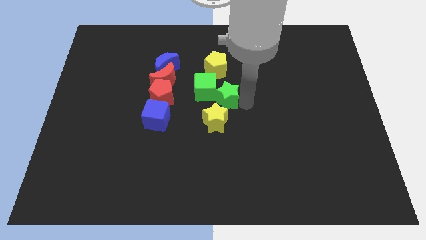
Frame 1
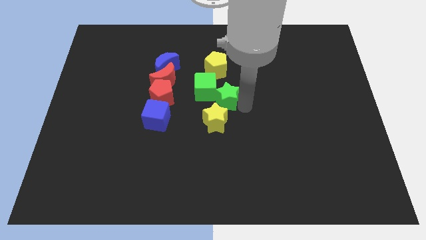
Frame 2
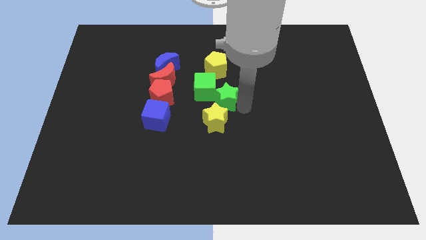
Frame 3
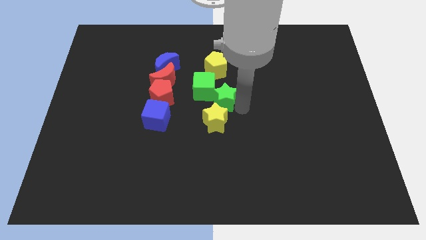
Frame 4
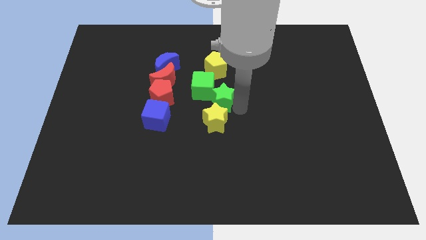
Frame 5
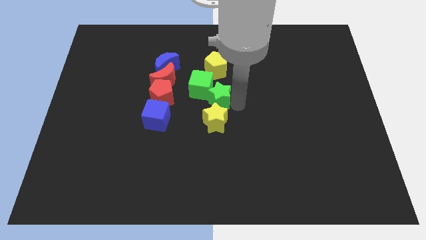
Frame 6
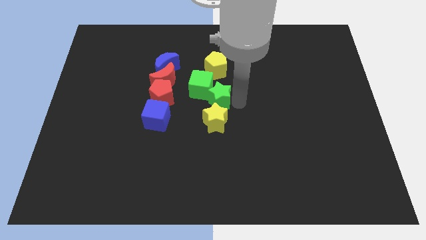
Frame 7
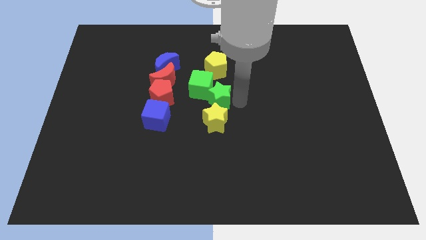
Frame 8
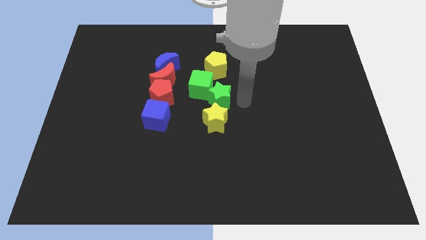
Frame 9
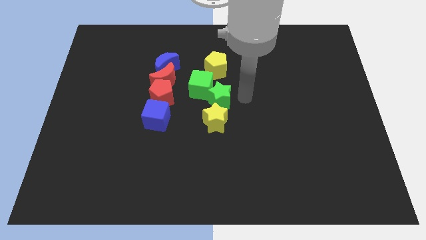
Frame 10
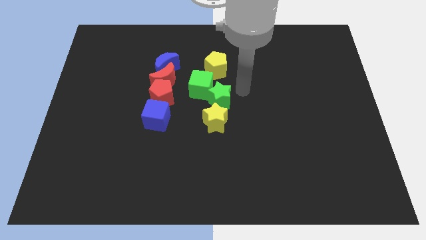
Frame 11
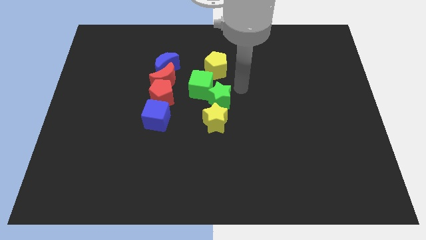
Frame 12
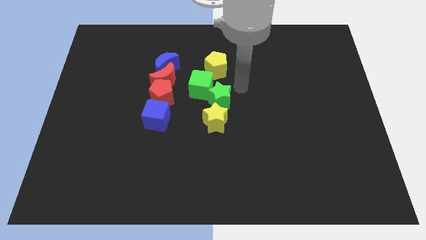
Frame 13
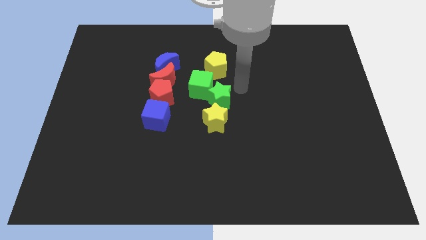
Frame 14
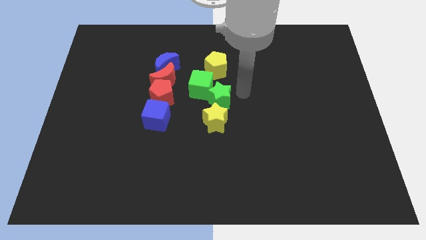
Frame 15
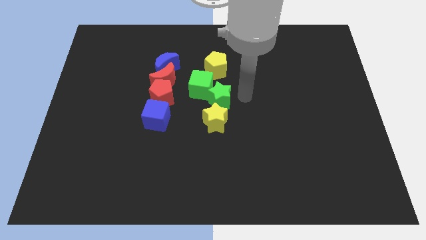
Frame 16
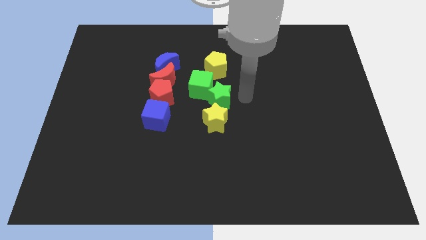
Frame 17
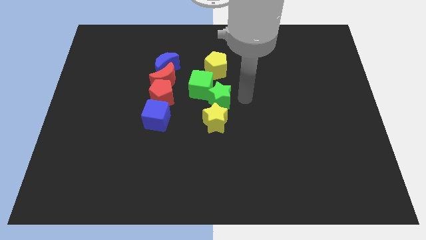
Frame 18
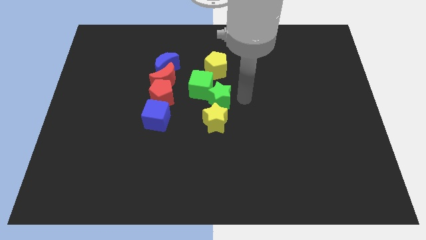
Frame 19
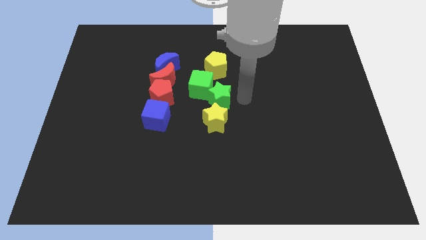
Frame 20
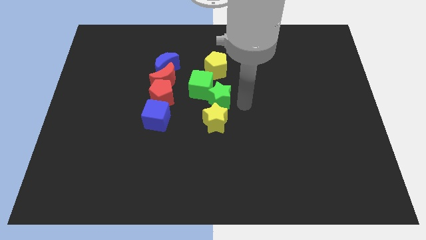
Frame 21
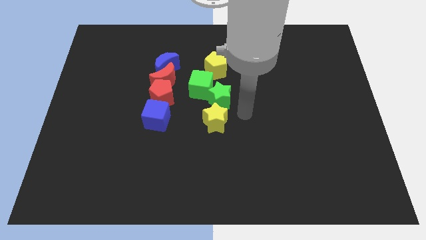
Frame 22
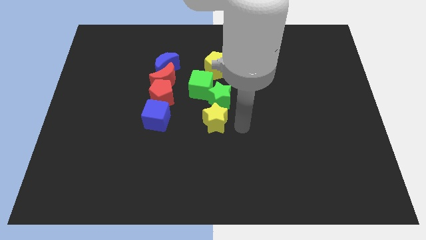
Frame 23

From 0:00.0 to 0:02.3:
slightly move the green star towards the top of yellow star

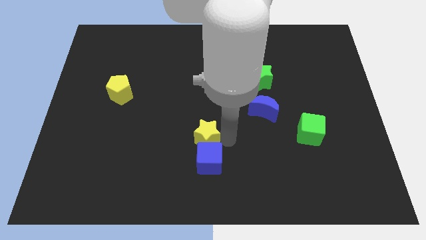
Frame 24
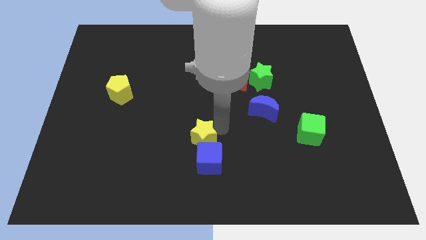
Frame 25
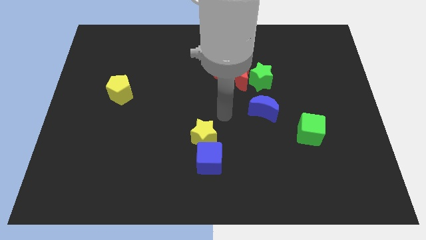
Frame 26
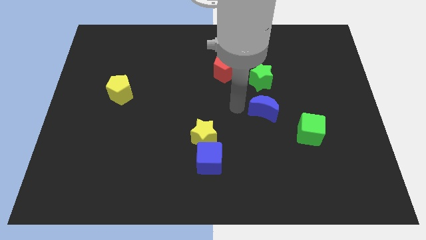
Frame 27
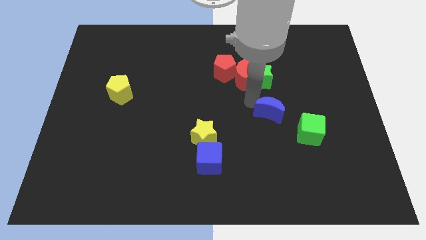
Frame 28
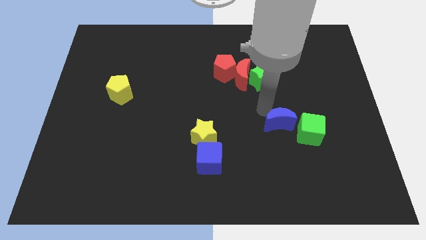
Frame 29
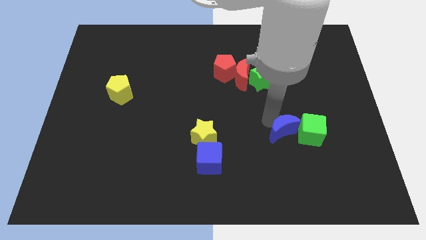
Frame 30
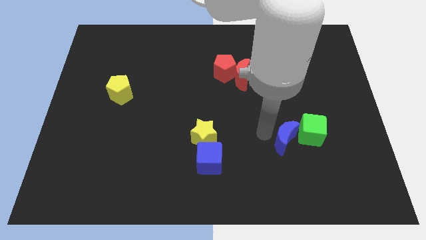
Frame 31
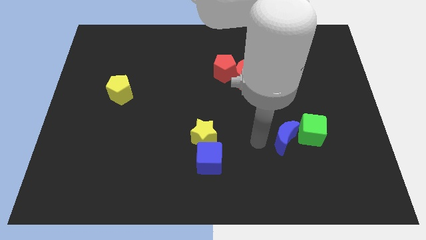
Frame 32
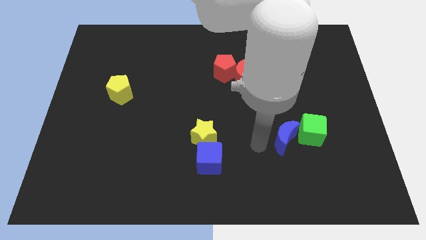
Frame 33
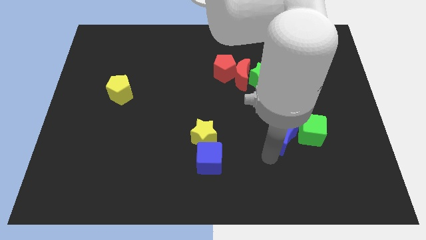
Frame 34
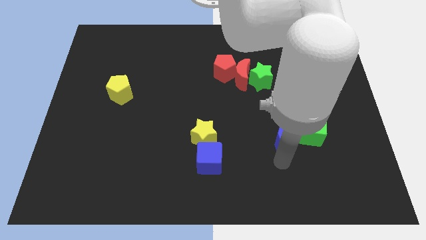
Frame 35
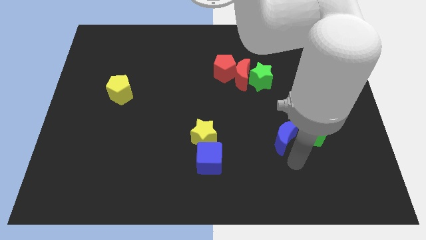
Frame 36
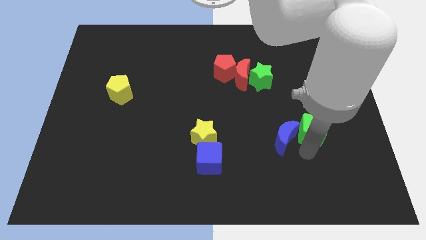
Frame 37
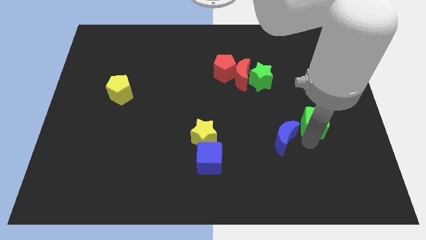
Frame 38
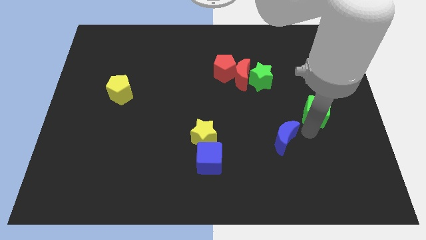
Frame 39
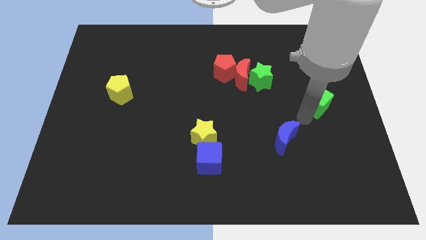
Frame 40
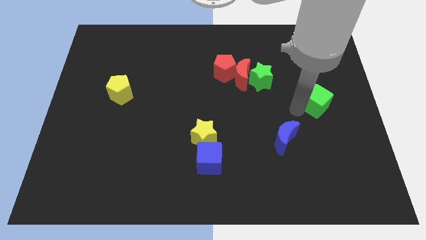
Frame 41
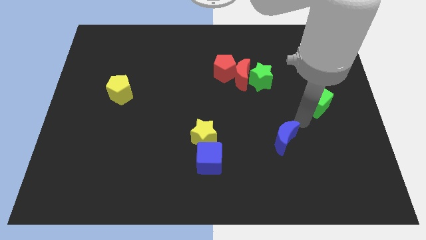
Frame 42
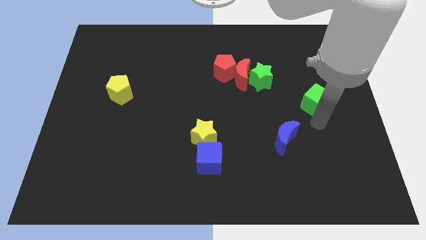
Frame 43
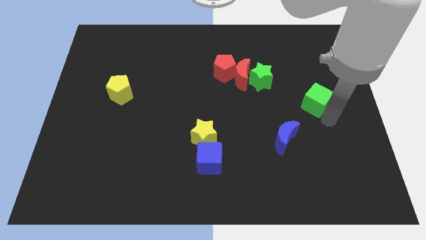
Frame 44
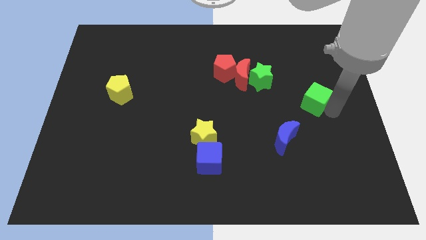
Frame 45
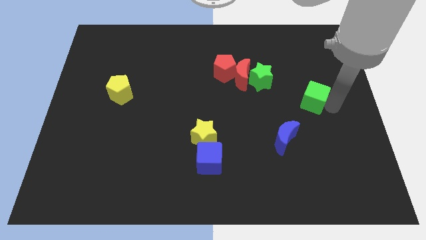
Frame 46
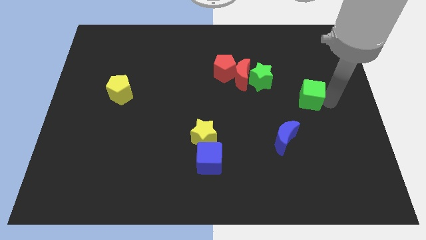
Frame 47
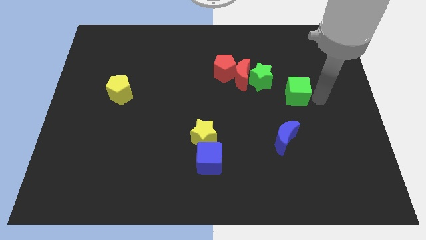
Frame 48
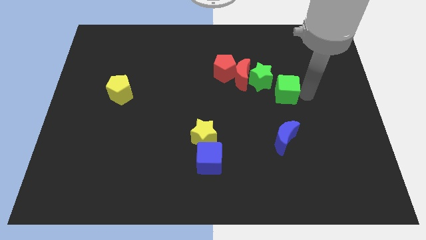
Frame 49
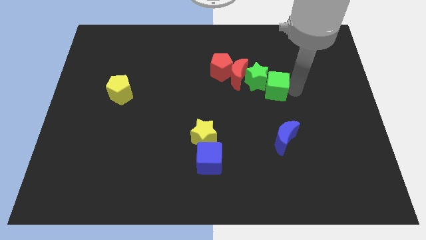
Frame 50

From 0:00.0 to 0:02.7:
push green cube above blue crescent

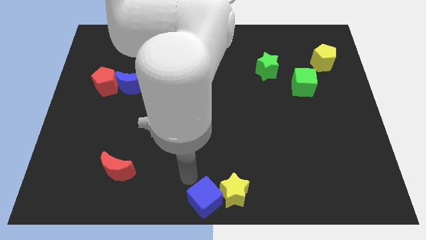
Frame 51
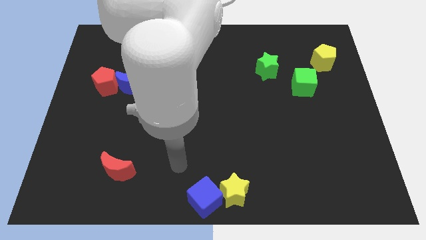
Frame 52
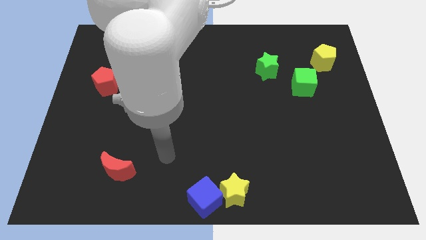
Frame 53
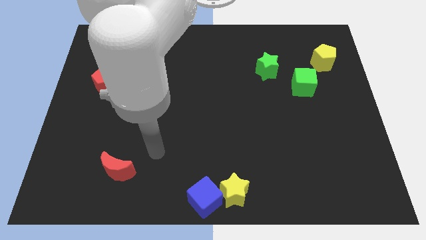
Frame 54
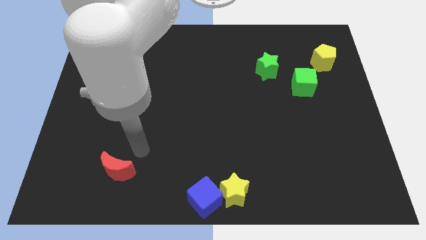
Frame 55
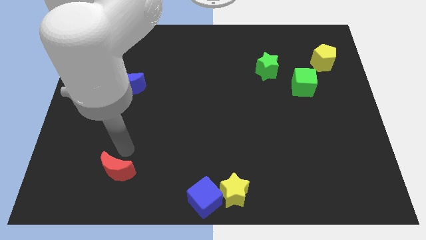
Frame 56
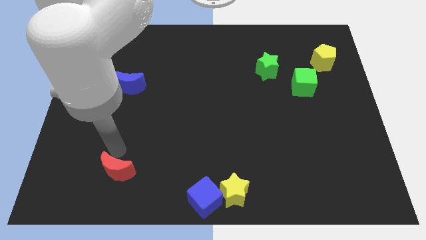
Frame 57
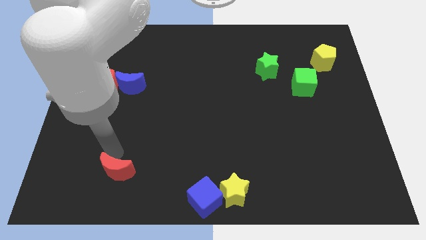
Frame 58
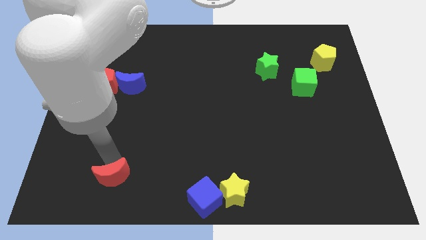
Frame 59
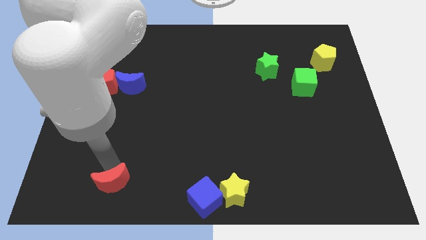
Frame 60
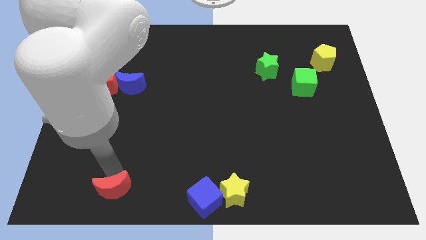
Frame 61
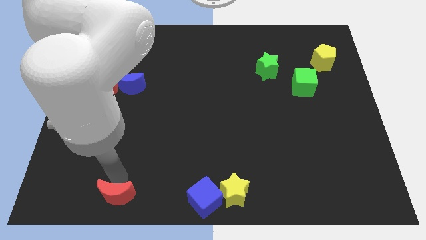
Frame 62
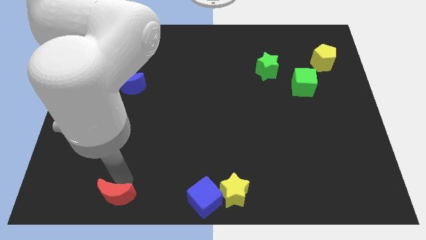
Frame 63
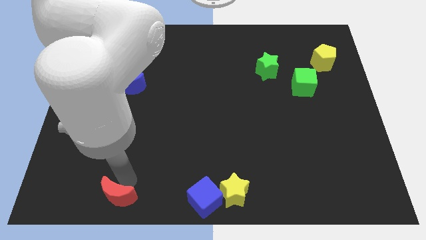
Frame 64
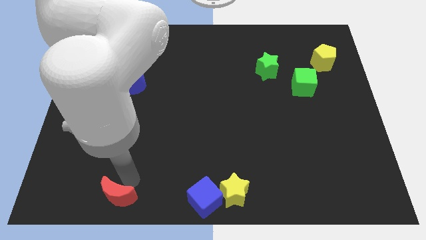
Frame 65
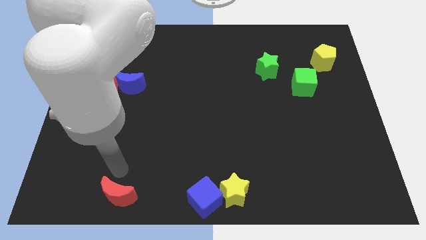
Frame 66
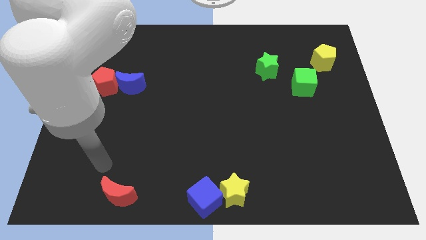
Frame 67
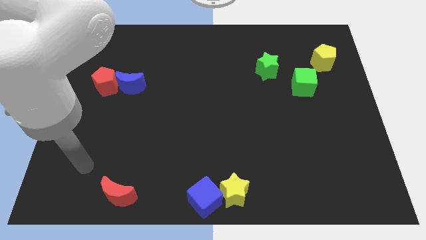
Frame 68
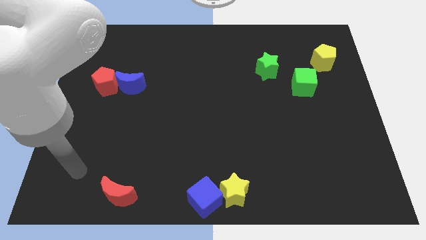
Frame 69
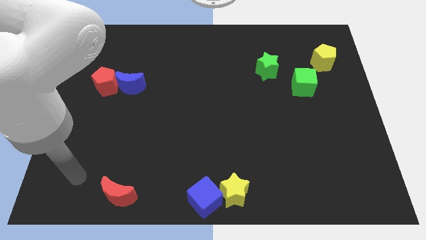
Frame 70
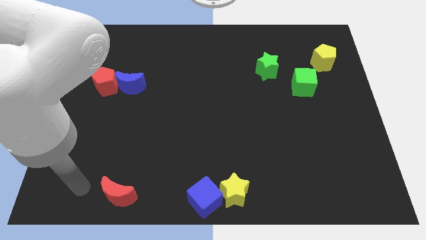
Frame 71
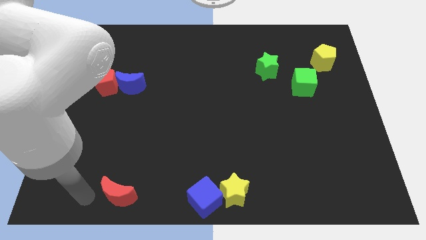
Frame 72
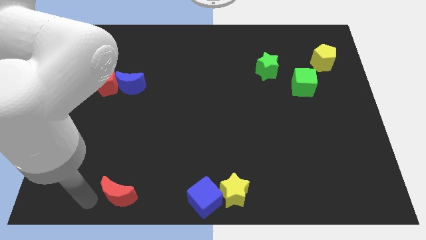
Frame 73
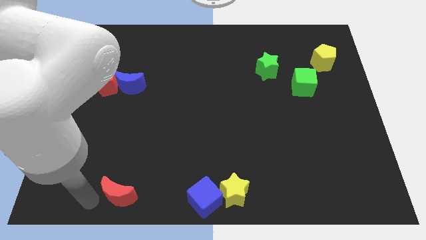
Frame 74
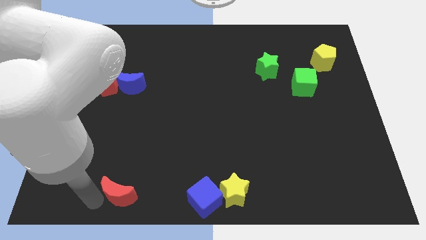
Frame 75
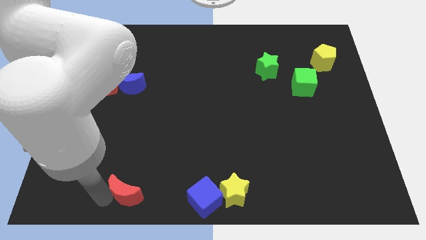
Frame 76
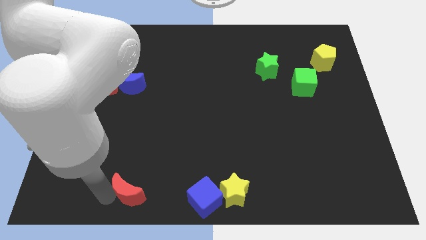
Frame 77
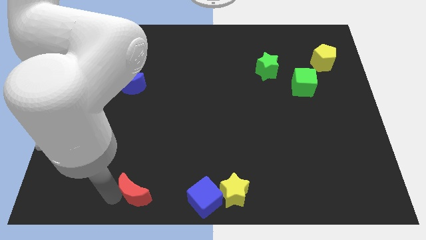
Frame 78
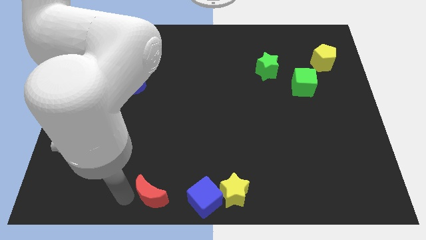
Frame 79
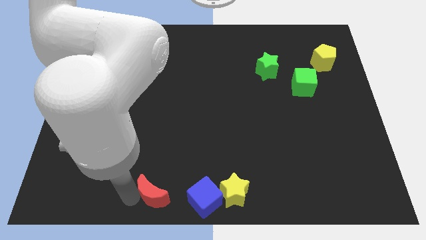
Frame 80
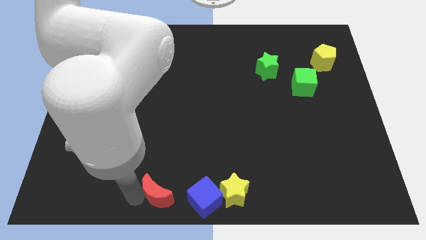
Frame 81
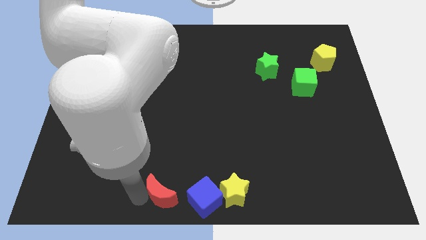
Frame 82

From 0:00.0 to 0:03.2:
drag the red moon parallel left to the blue cube

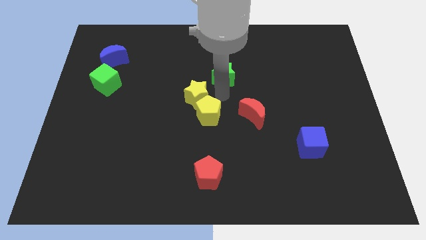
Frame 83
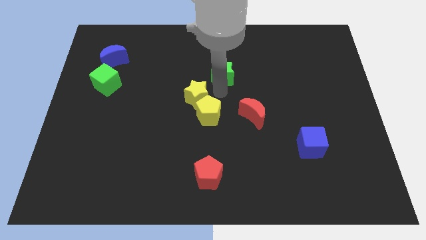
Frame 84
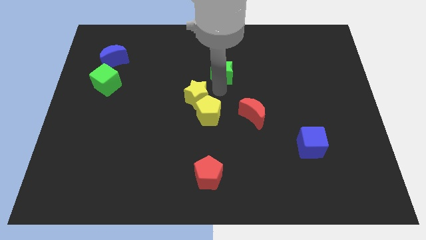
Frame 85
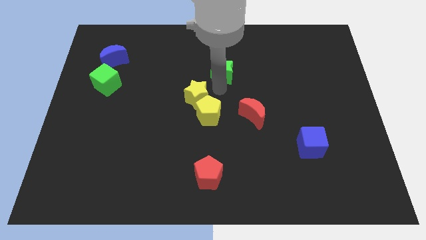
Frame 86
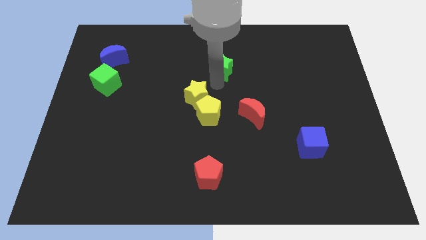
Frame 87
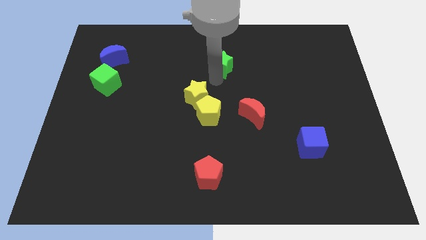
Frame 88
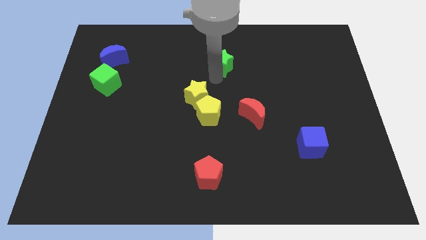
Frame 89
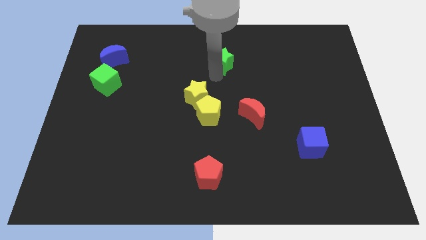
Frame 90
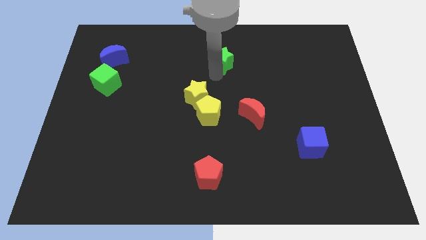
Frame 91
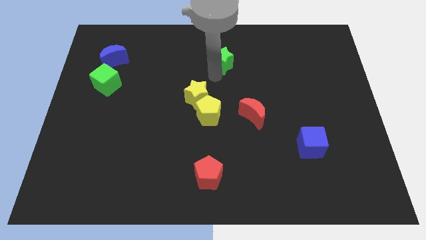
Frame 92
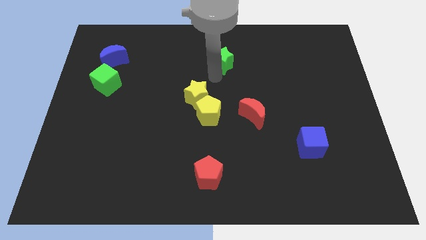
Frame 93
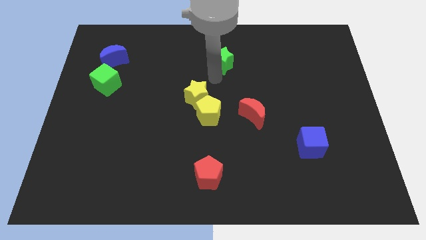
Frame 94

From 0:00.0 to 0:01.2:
move the green star up slightly
